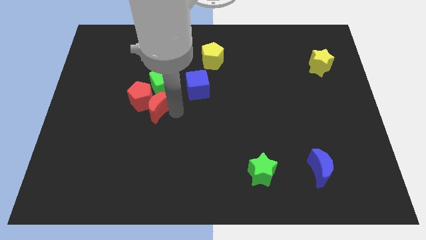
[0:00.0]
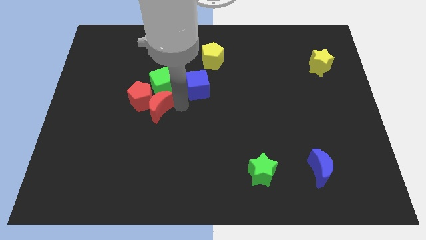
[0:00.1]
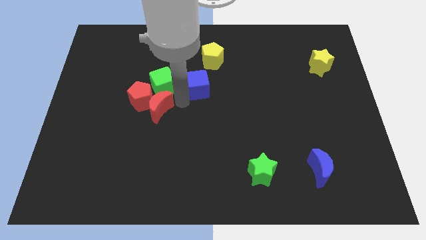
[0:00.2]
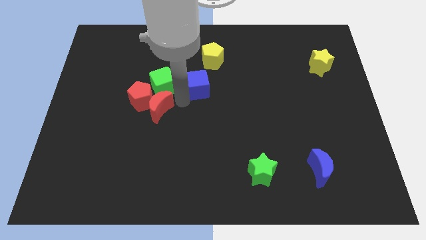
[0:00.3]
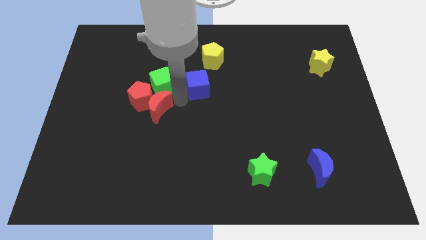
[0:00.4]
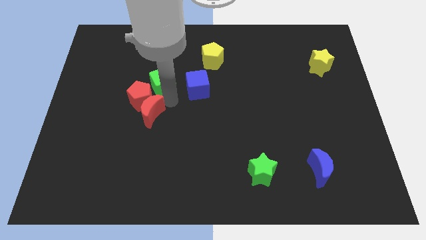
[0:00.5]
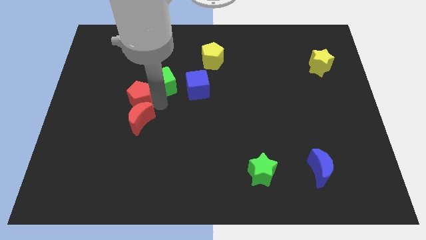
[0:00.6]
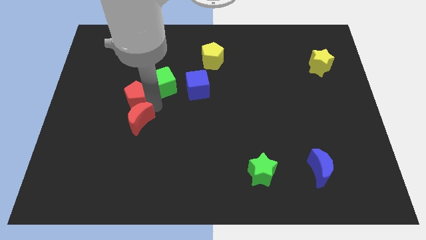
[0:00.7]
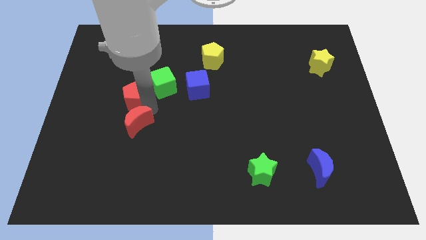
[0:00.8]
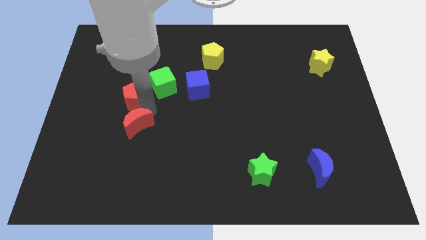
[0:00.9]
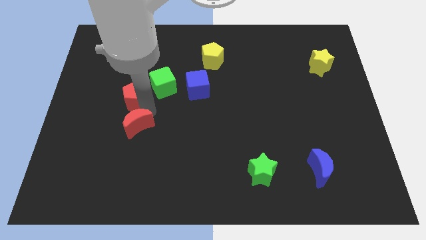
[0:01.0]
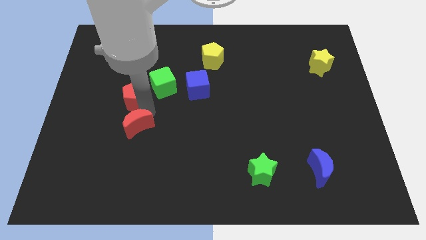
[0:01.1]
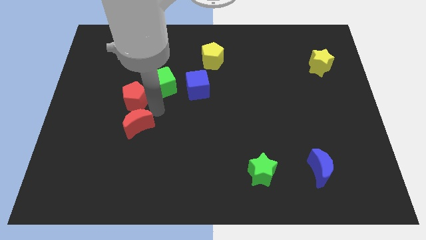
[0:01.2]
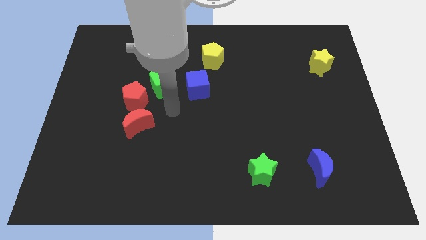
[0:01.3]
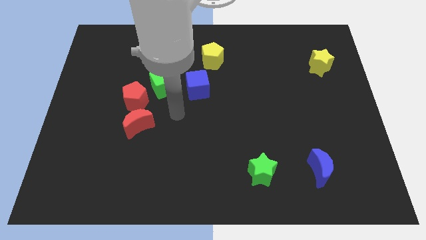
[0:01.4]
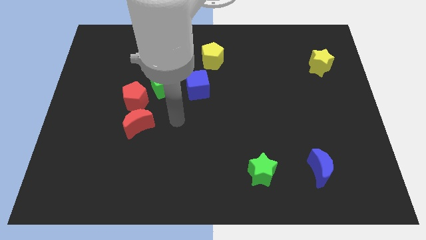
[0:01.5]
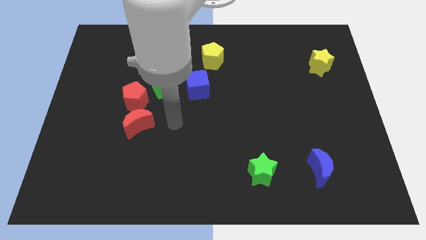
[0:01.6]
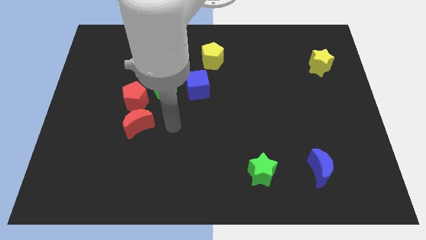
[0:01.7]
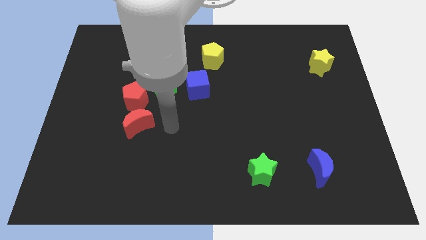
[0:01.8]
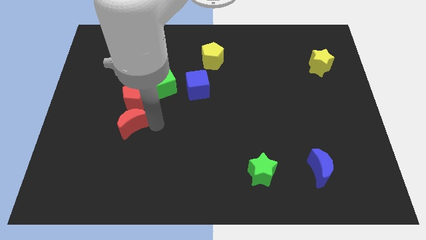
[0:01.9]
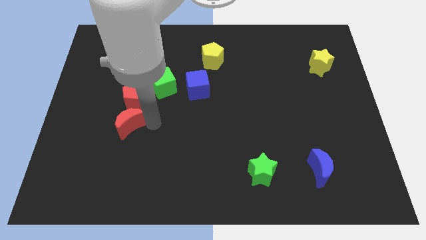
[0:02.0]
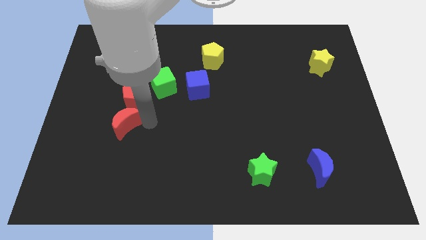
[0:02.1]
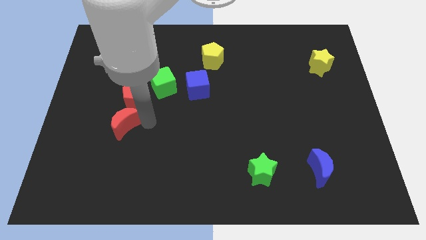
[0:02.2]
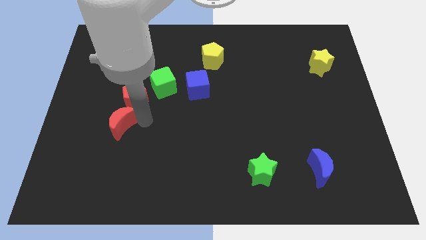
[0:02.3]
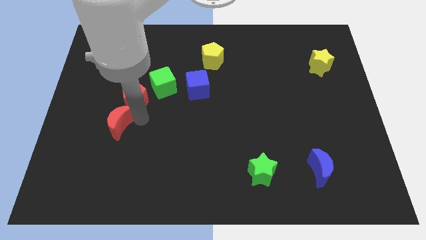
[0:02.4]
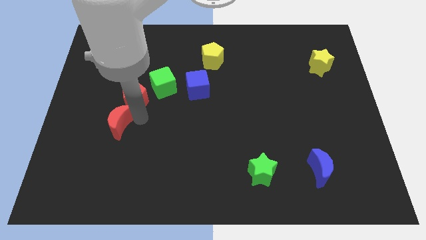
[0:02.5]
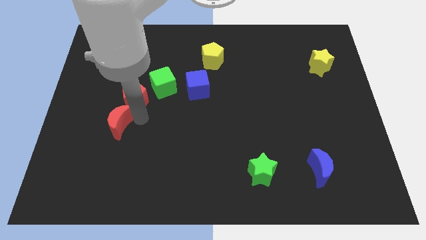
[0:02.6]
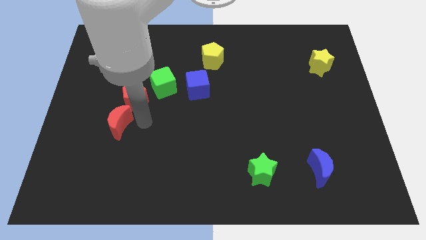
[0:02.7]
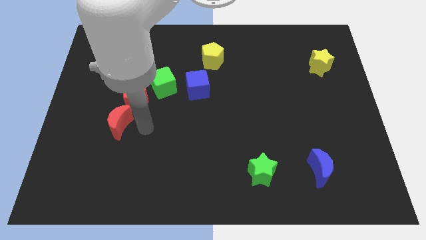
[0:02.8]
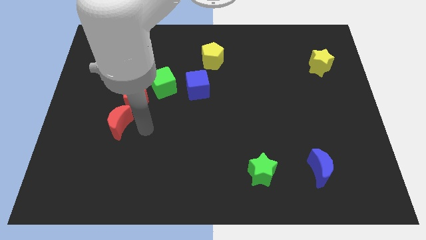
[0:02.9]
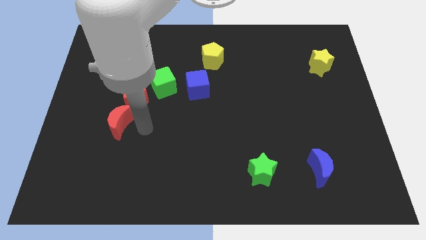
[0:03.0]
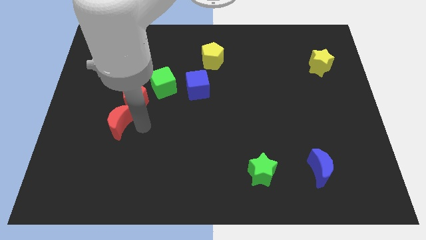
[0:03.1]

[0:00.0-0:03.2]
push the red crescent to the bottom left to the red pentagon

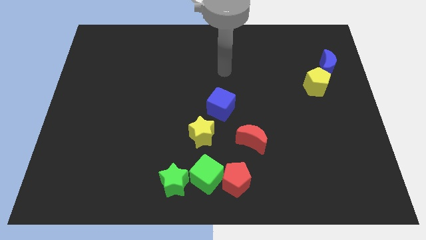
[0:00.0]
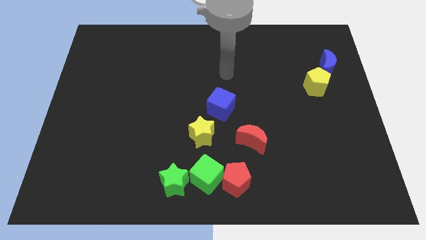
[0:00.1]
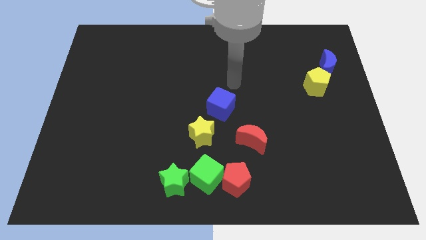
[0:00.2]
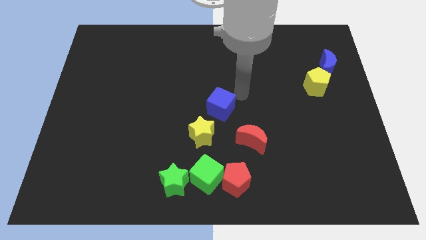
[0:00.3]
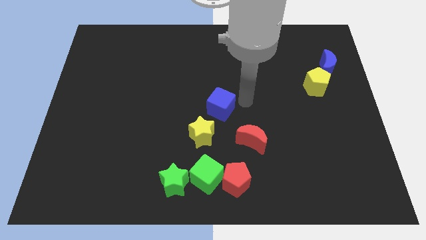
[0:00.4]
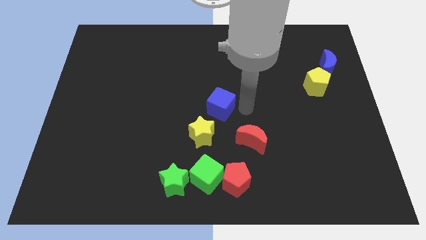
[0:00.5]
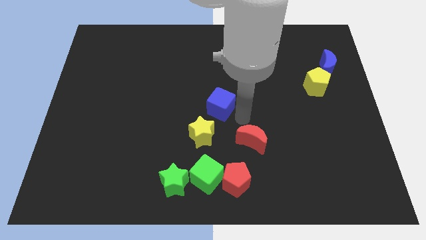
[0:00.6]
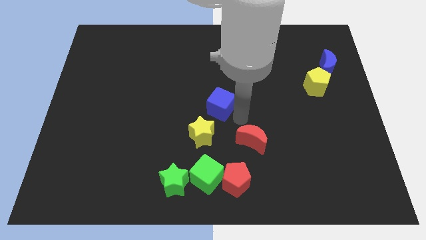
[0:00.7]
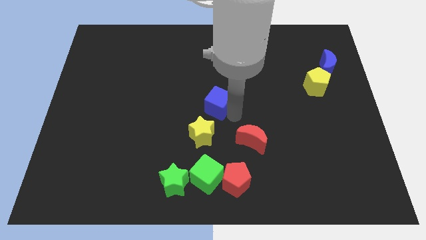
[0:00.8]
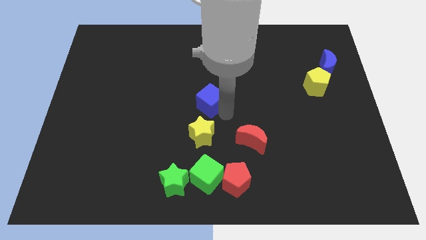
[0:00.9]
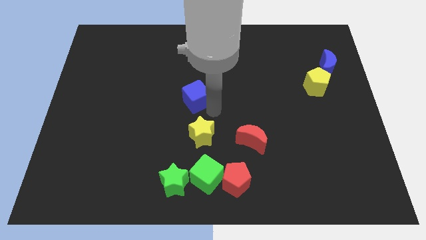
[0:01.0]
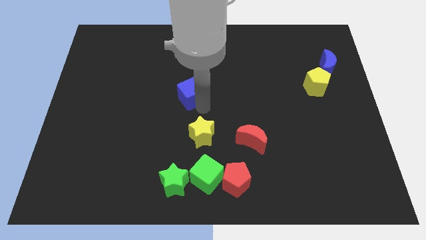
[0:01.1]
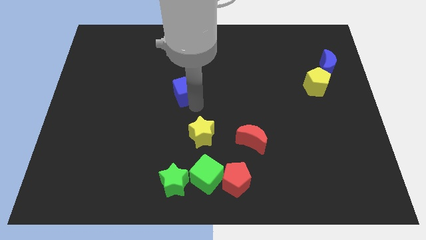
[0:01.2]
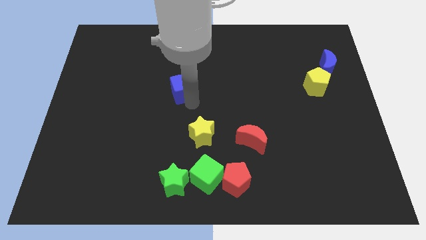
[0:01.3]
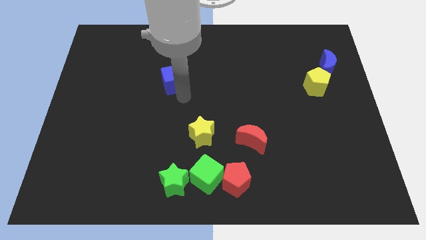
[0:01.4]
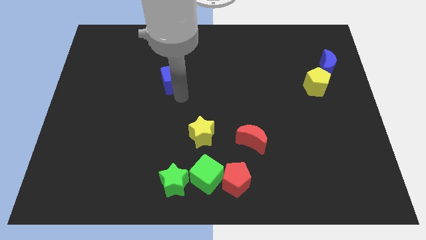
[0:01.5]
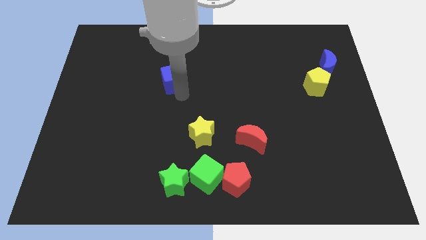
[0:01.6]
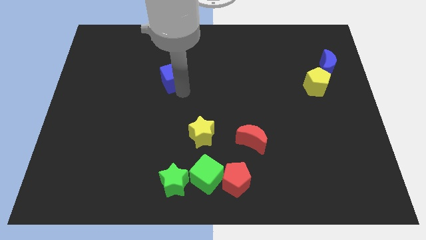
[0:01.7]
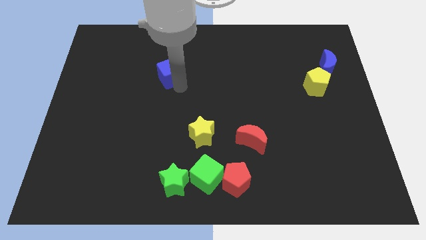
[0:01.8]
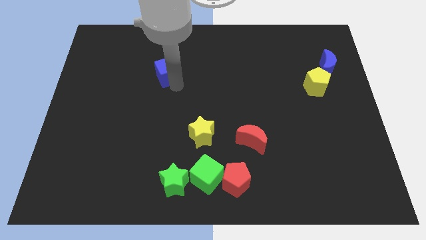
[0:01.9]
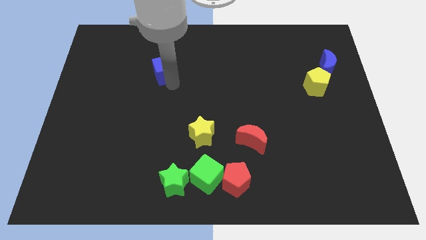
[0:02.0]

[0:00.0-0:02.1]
move the blue cube towards the top right of the board

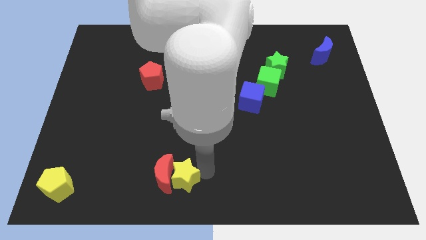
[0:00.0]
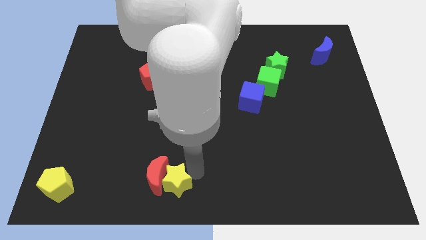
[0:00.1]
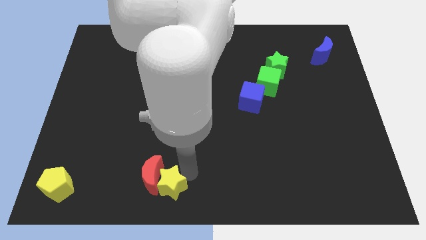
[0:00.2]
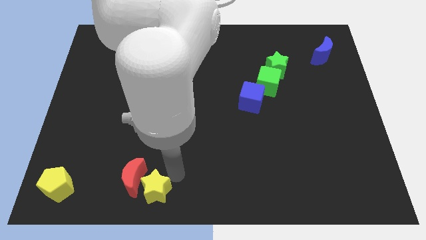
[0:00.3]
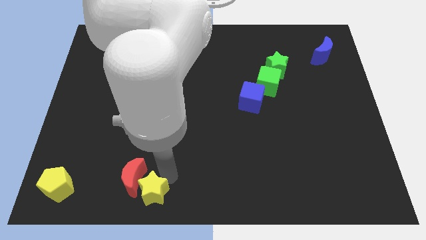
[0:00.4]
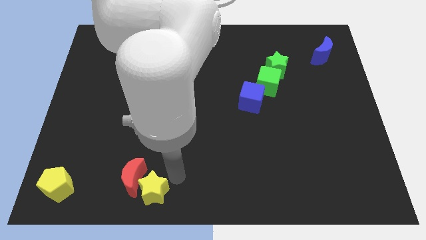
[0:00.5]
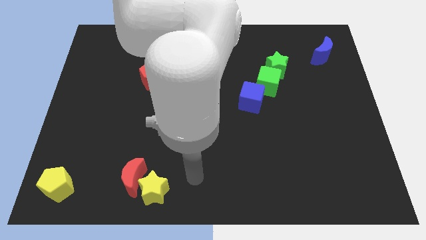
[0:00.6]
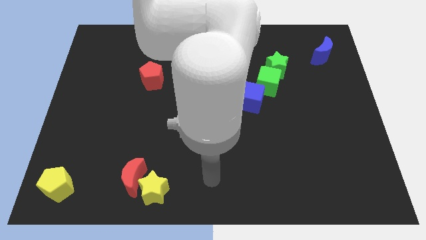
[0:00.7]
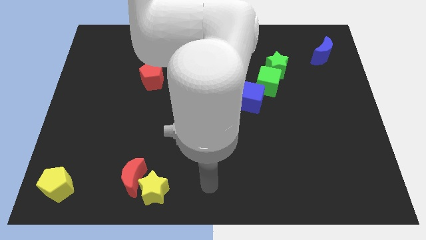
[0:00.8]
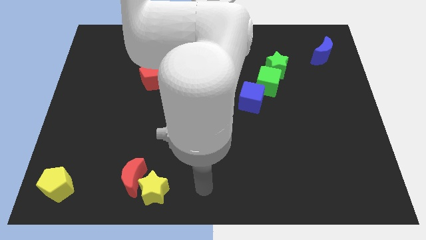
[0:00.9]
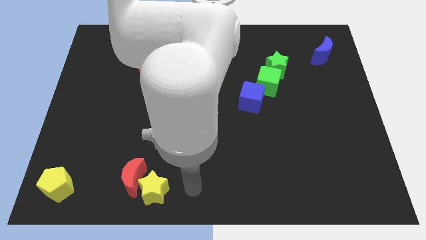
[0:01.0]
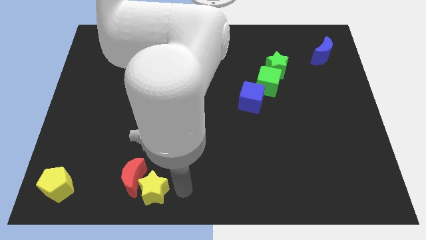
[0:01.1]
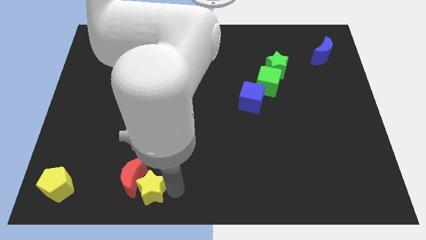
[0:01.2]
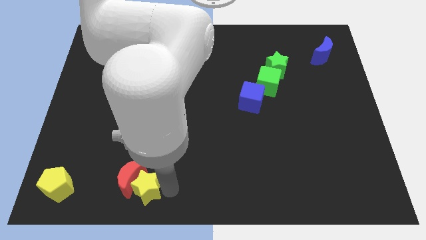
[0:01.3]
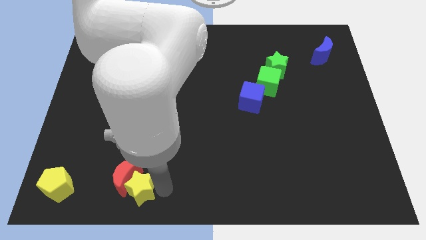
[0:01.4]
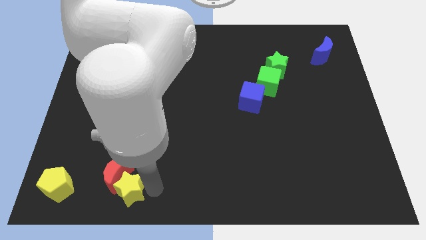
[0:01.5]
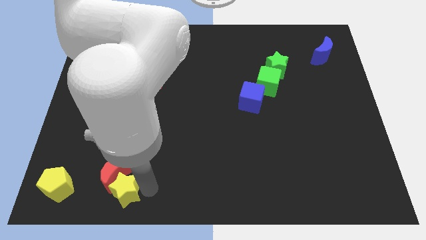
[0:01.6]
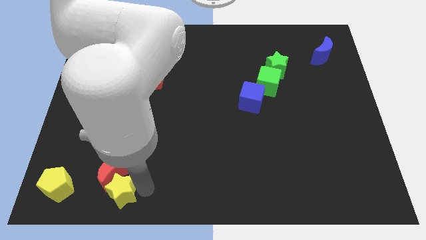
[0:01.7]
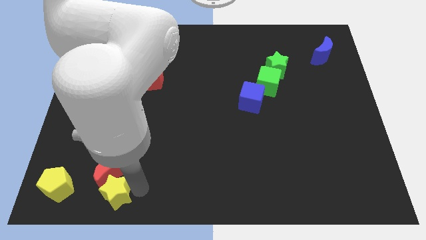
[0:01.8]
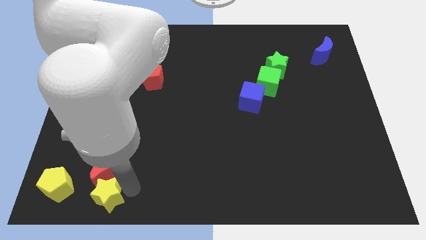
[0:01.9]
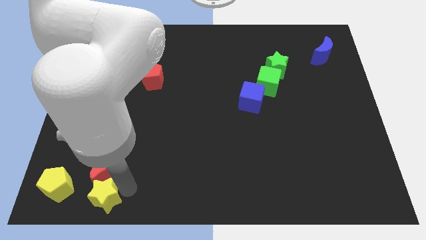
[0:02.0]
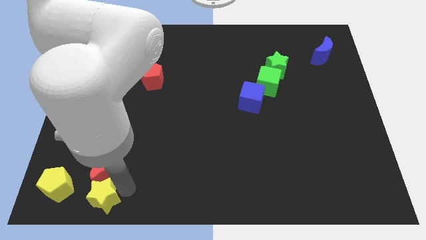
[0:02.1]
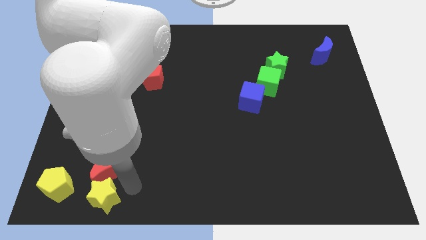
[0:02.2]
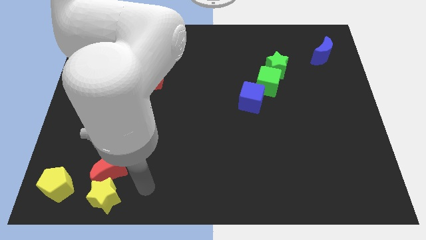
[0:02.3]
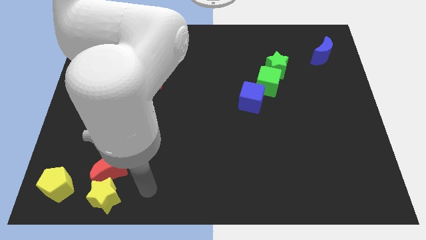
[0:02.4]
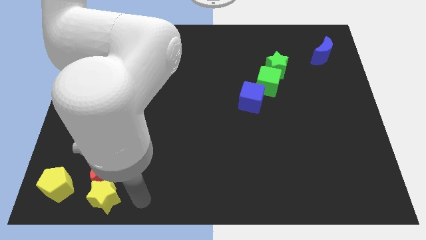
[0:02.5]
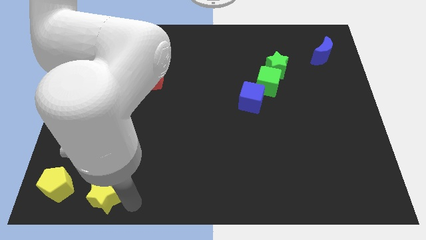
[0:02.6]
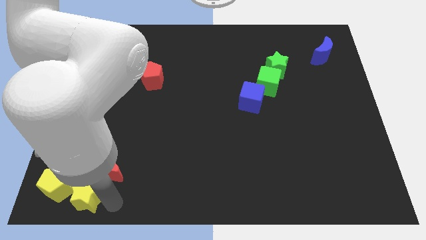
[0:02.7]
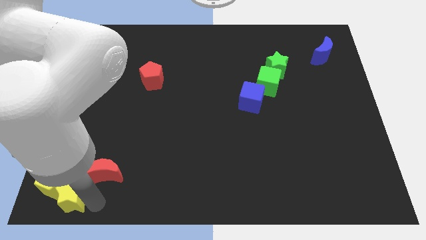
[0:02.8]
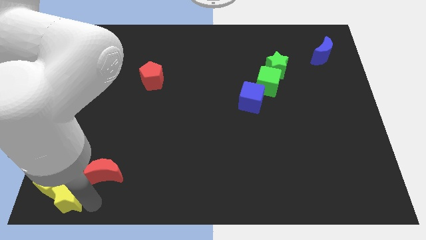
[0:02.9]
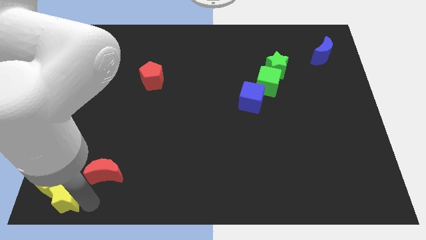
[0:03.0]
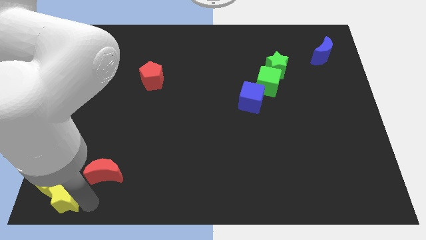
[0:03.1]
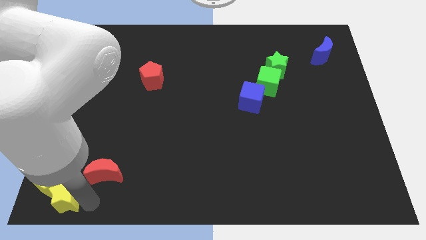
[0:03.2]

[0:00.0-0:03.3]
push the yellow star to the right side of the yellow pentagon

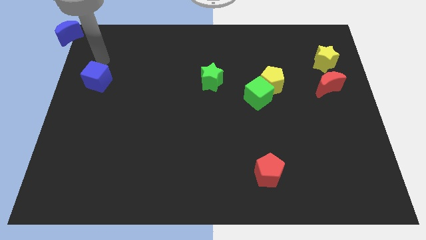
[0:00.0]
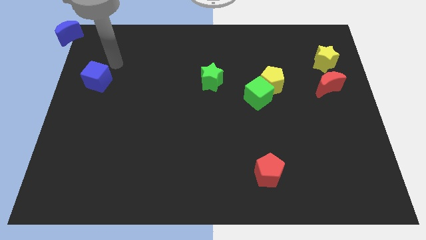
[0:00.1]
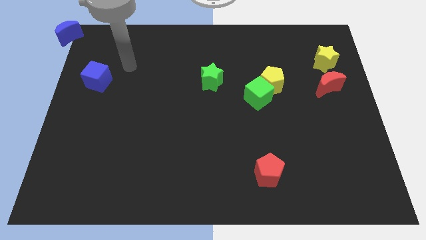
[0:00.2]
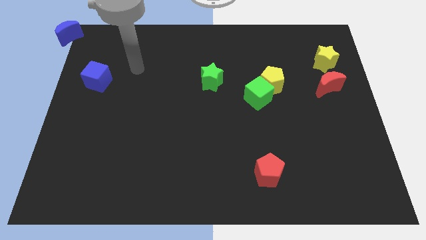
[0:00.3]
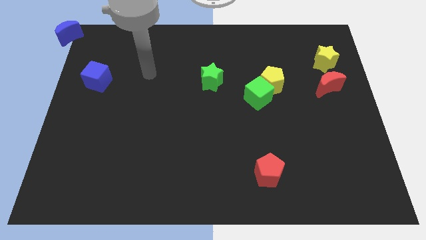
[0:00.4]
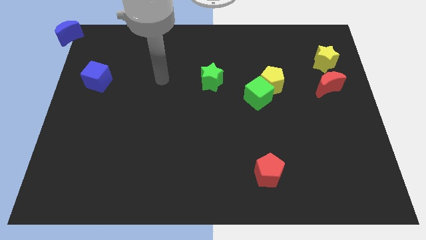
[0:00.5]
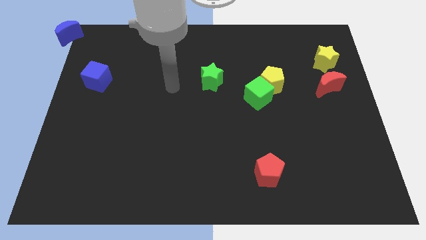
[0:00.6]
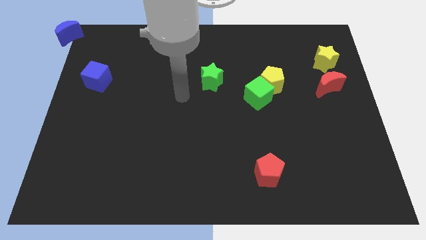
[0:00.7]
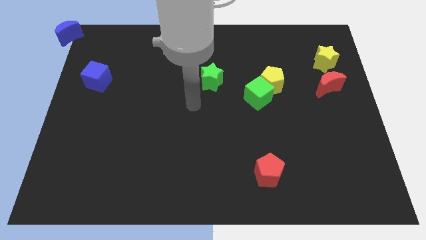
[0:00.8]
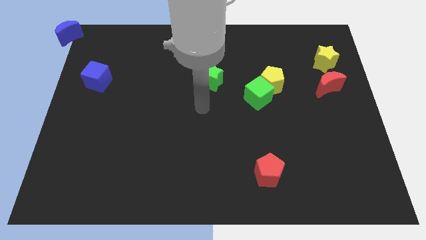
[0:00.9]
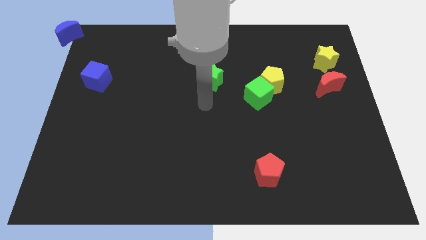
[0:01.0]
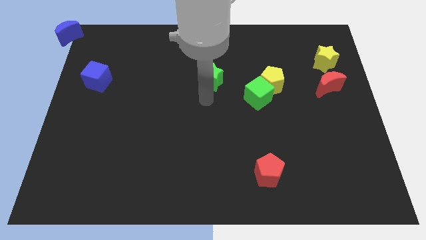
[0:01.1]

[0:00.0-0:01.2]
point your arm below the green star
